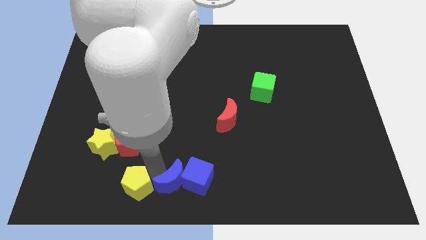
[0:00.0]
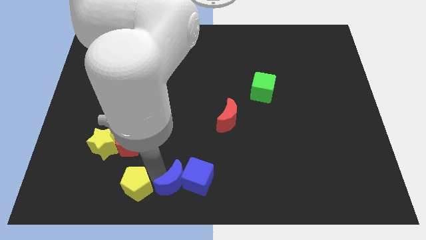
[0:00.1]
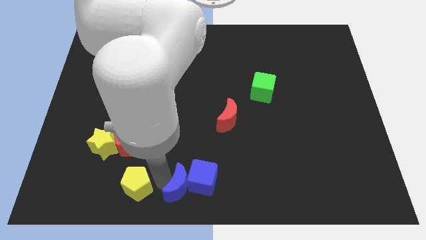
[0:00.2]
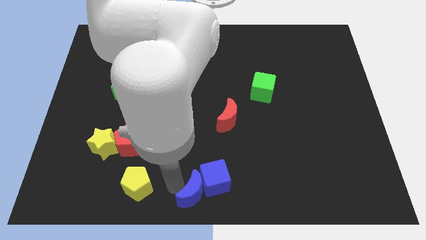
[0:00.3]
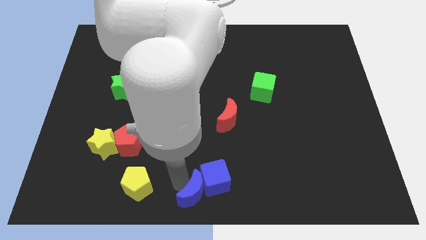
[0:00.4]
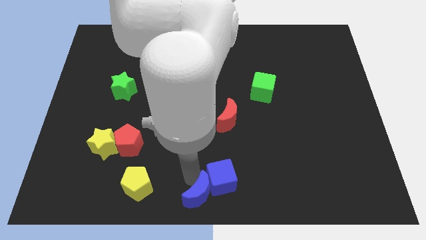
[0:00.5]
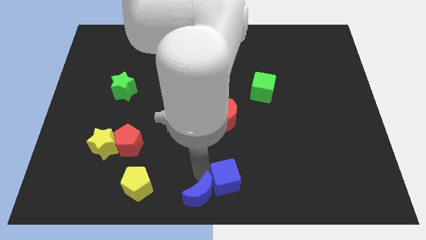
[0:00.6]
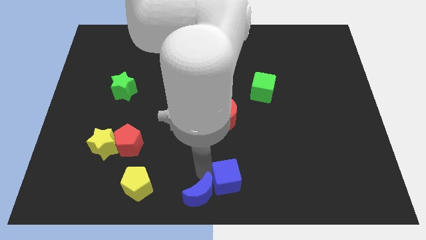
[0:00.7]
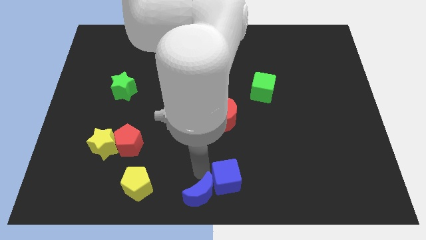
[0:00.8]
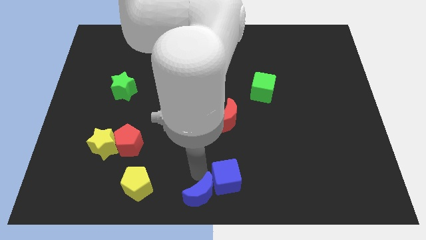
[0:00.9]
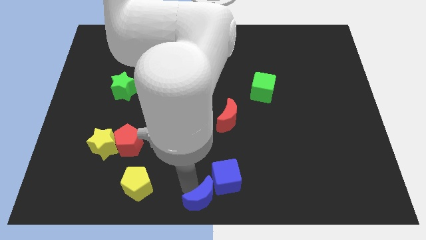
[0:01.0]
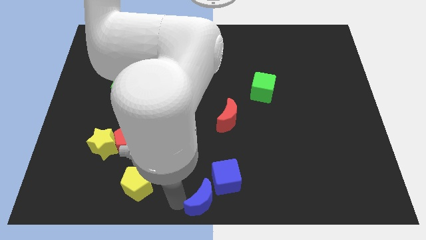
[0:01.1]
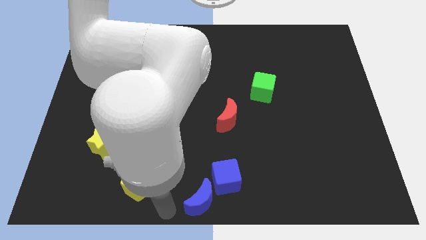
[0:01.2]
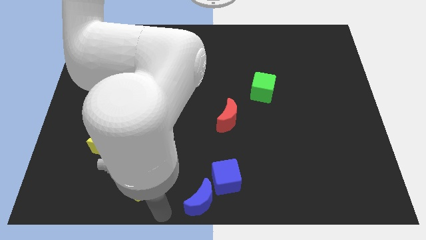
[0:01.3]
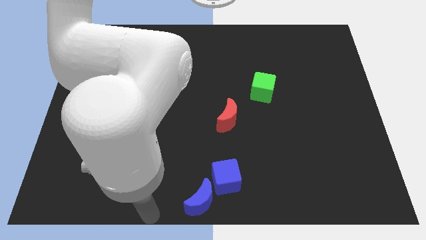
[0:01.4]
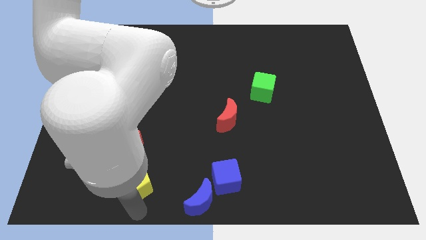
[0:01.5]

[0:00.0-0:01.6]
place the blue blocks at the bottom center of the board

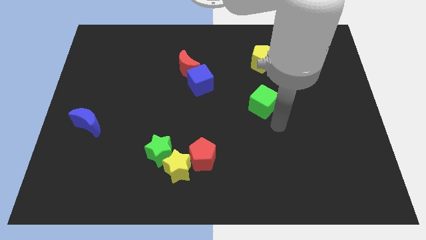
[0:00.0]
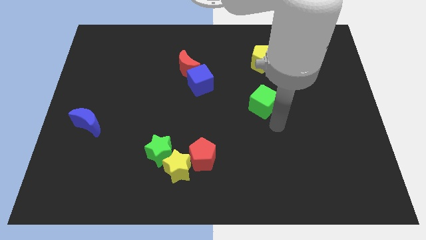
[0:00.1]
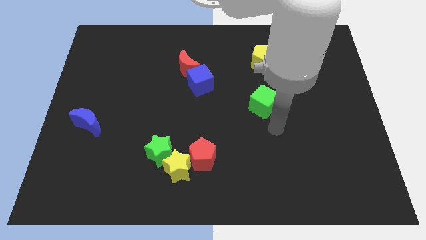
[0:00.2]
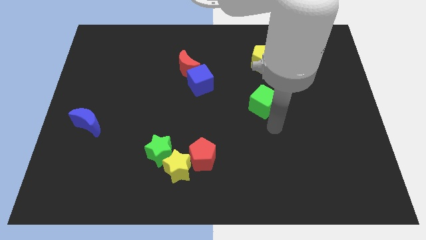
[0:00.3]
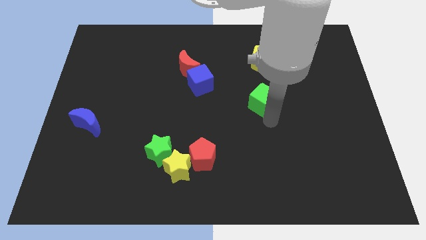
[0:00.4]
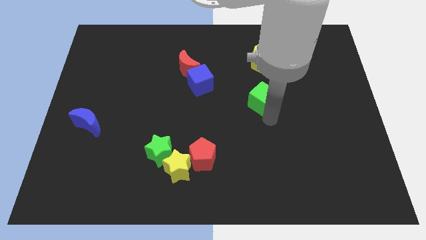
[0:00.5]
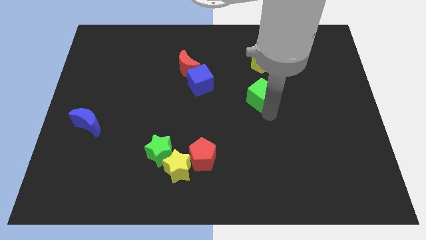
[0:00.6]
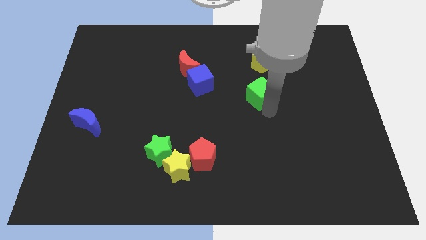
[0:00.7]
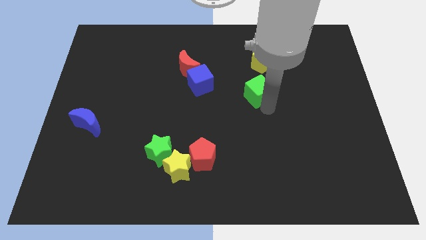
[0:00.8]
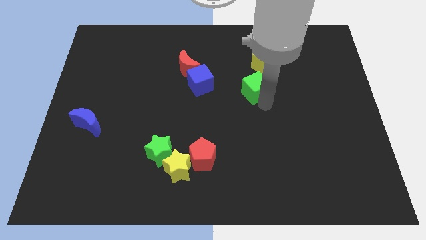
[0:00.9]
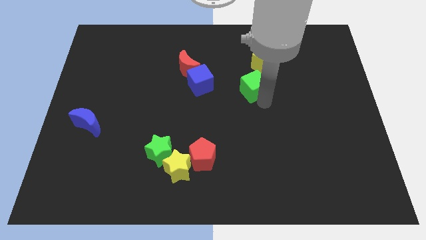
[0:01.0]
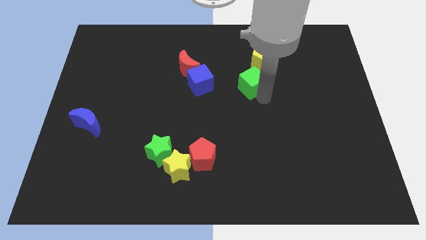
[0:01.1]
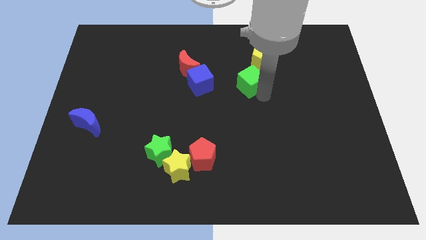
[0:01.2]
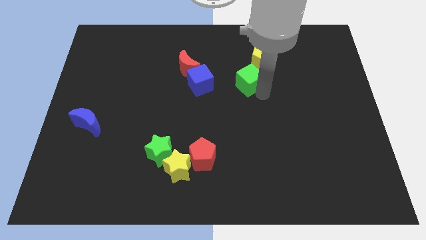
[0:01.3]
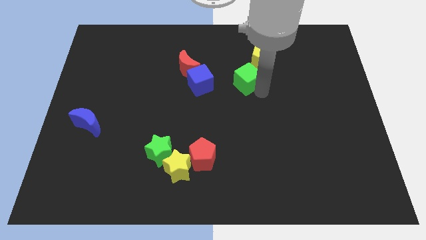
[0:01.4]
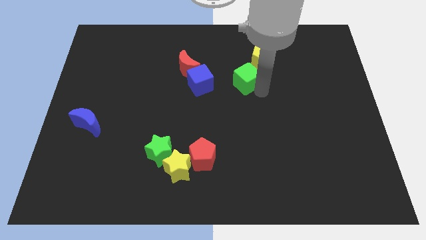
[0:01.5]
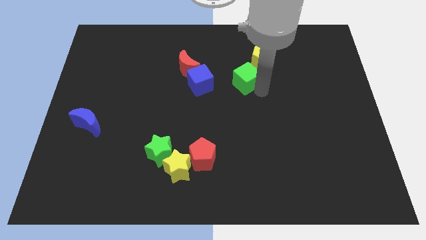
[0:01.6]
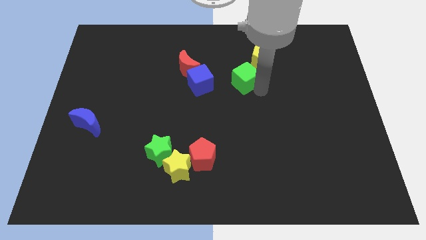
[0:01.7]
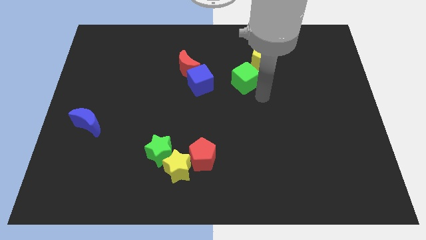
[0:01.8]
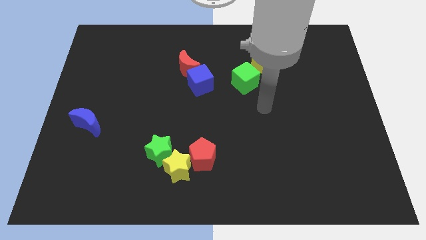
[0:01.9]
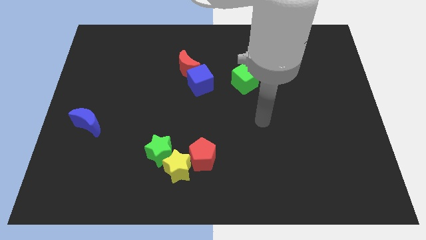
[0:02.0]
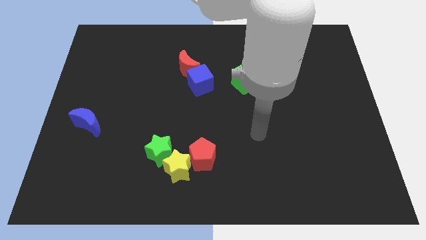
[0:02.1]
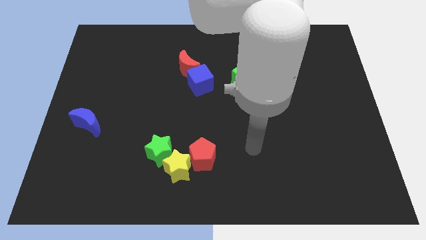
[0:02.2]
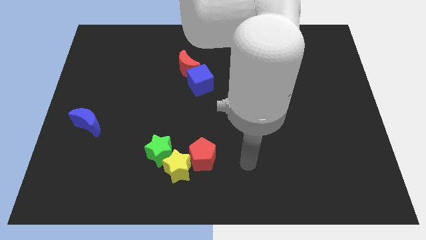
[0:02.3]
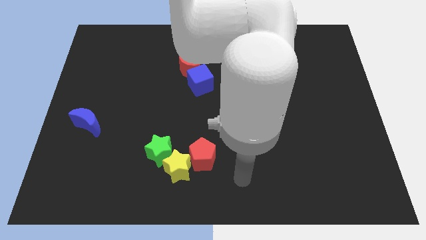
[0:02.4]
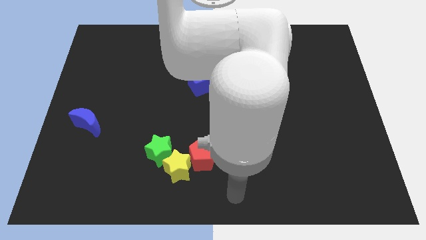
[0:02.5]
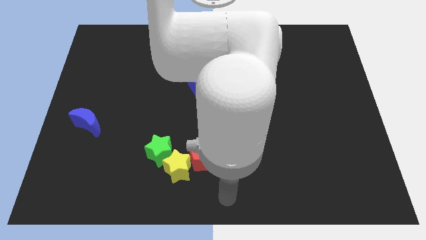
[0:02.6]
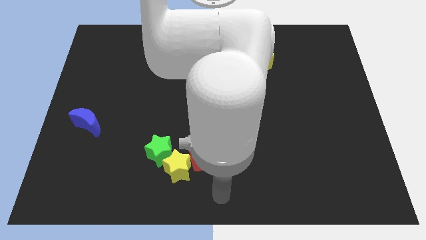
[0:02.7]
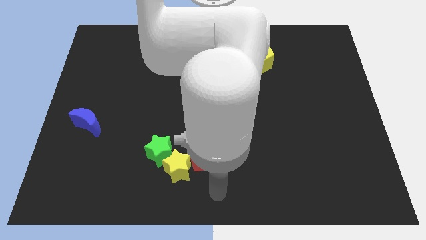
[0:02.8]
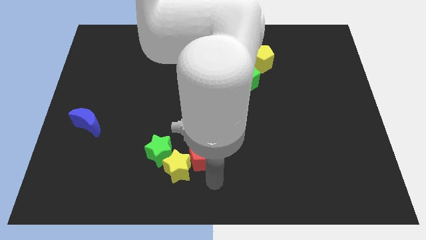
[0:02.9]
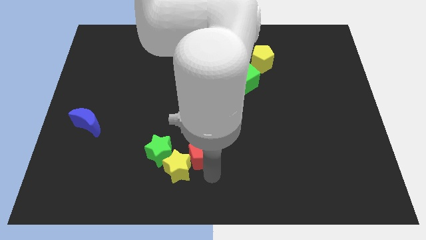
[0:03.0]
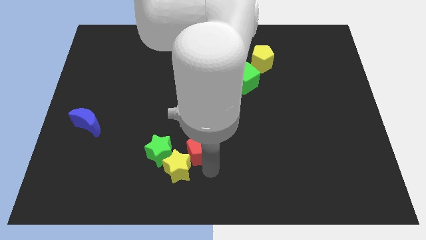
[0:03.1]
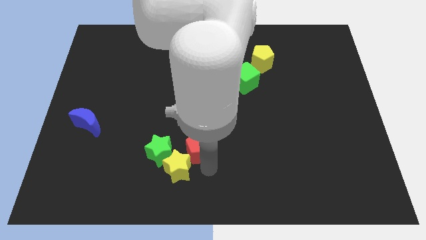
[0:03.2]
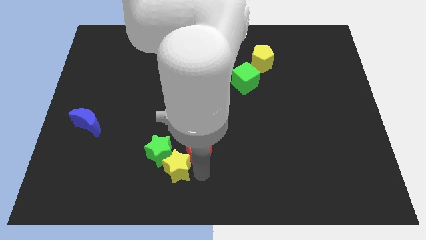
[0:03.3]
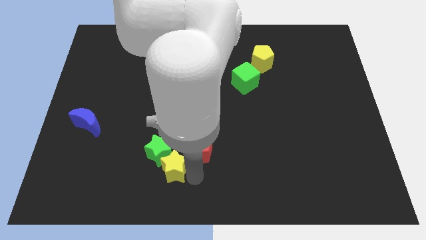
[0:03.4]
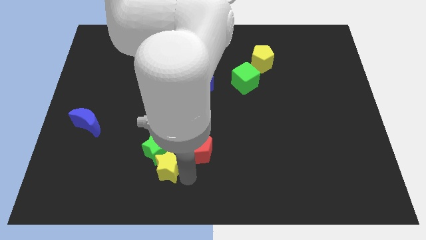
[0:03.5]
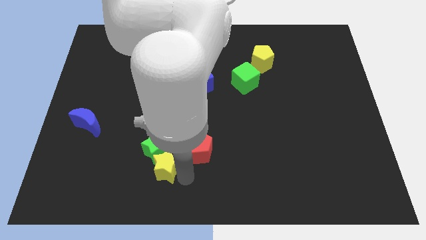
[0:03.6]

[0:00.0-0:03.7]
place the green cube diagonal to the yellow pentagon

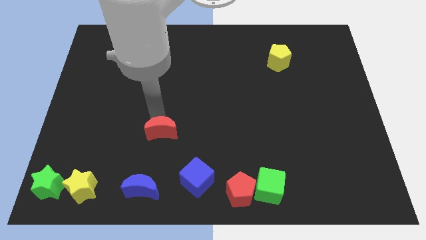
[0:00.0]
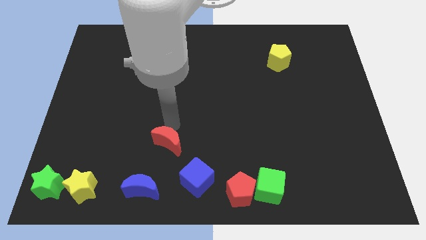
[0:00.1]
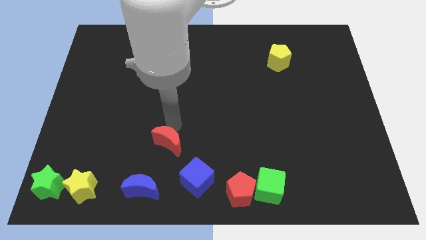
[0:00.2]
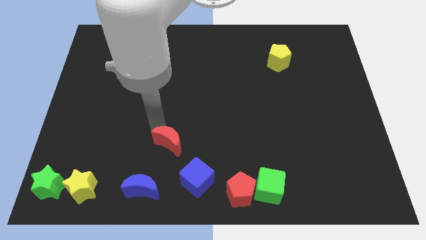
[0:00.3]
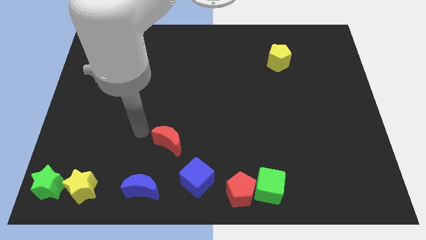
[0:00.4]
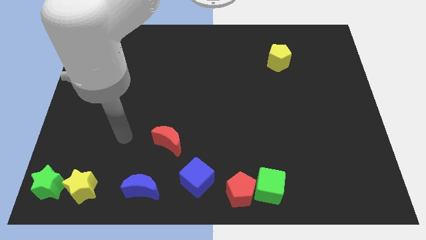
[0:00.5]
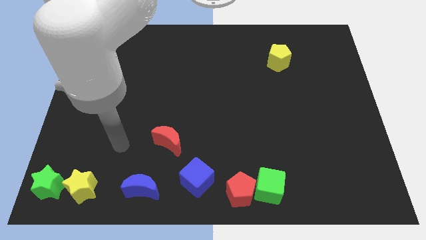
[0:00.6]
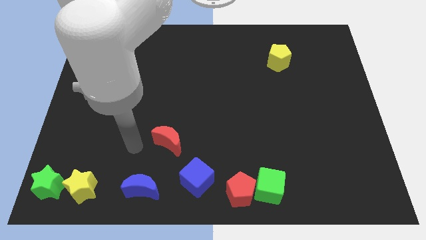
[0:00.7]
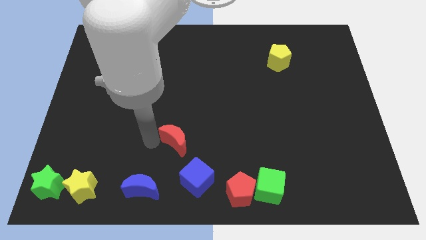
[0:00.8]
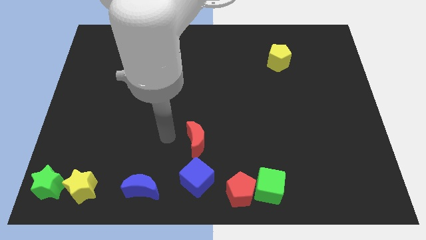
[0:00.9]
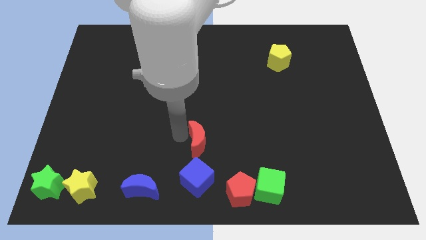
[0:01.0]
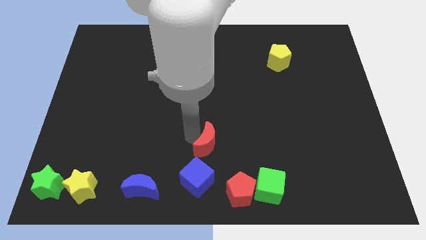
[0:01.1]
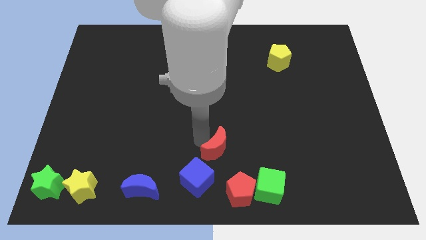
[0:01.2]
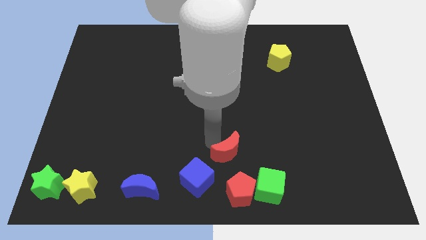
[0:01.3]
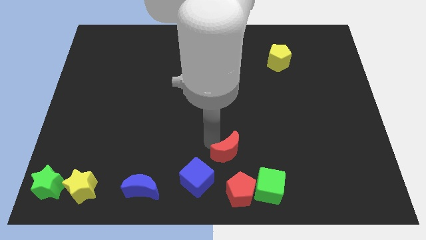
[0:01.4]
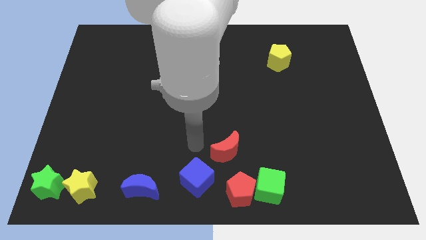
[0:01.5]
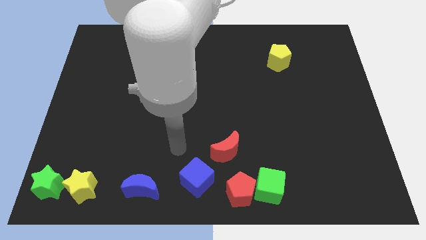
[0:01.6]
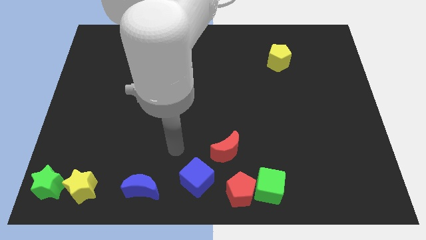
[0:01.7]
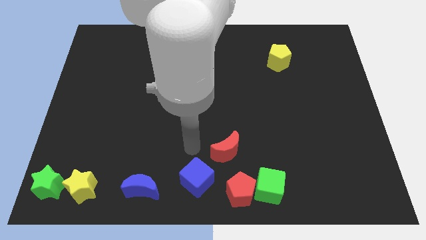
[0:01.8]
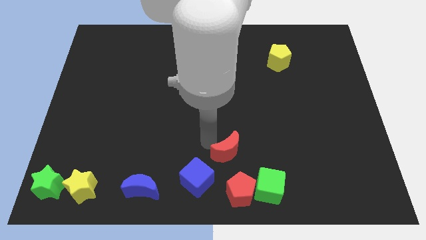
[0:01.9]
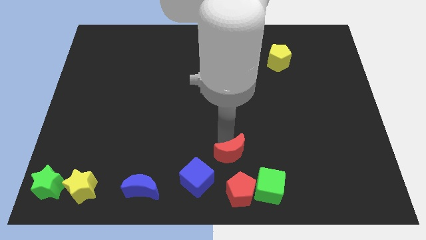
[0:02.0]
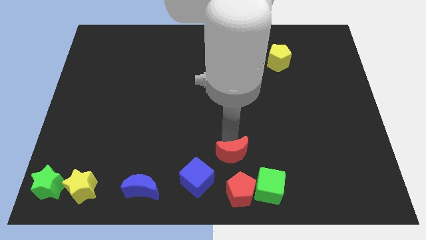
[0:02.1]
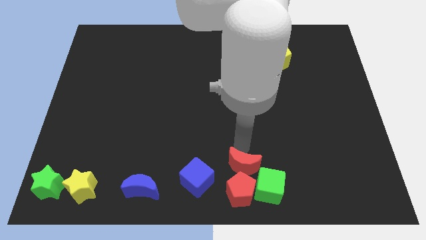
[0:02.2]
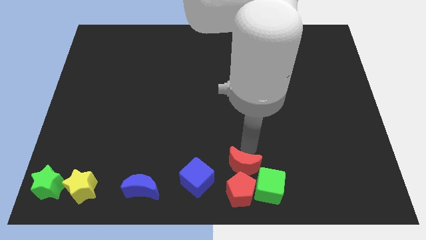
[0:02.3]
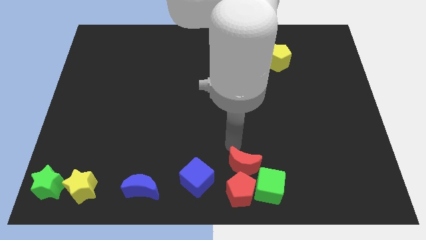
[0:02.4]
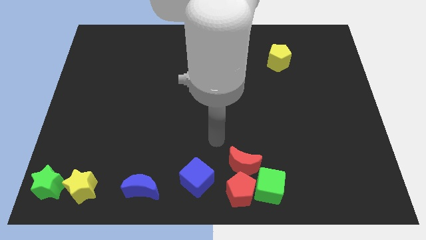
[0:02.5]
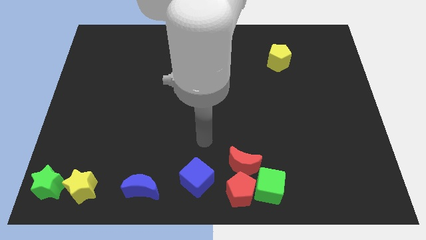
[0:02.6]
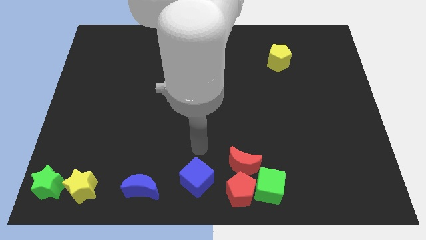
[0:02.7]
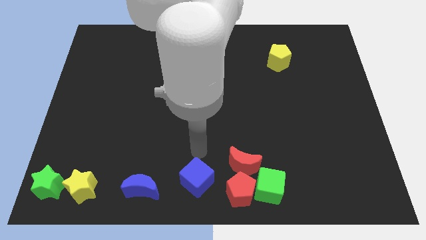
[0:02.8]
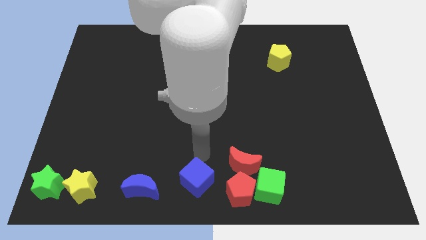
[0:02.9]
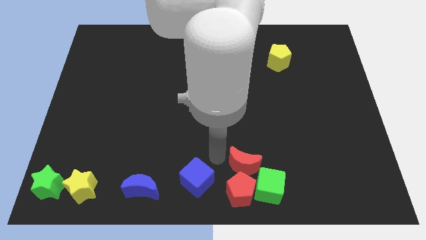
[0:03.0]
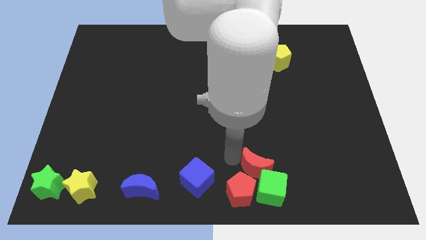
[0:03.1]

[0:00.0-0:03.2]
put the red moon vertically above the red pentagon

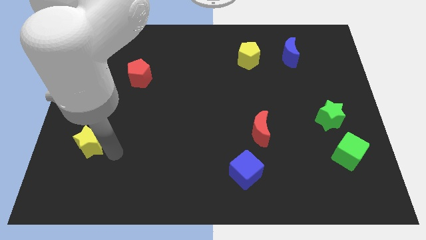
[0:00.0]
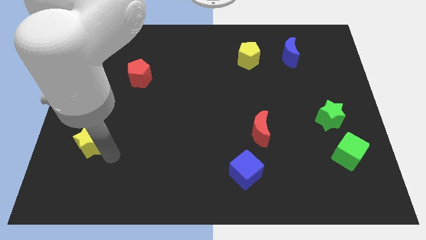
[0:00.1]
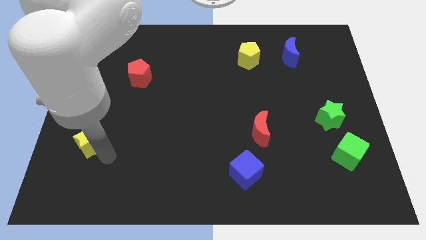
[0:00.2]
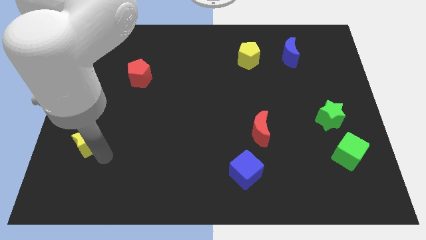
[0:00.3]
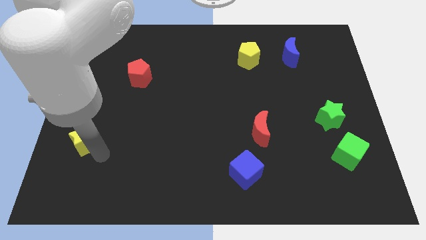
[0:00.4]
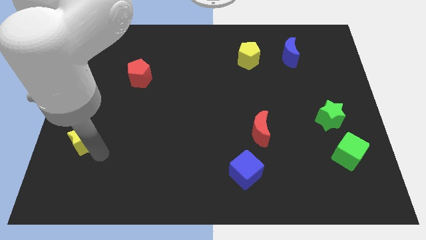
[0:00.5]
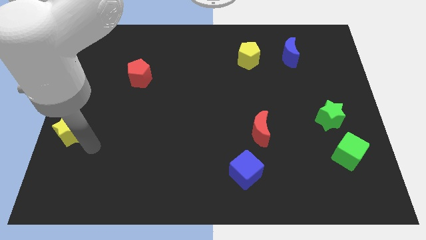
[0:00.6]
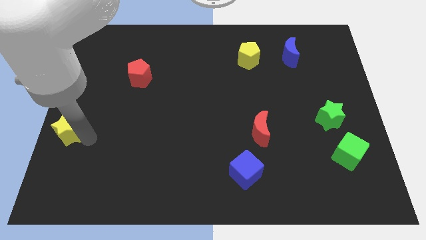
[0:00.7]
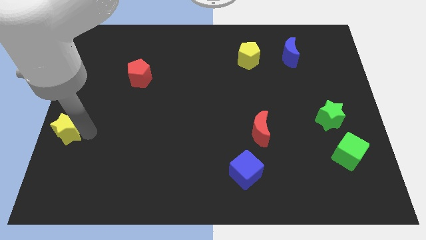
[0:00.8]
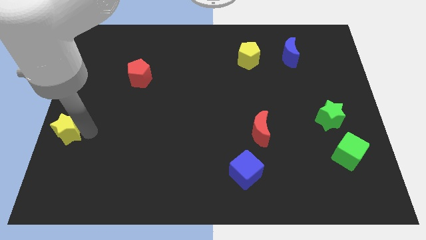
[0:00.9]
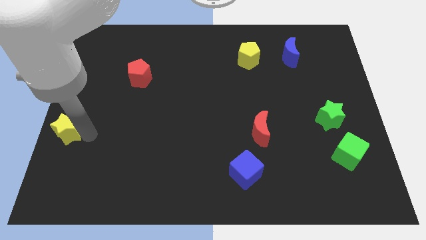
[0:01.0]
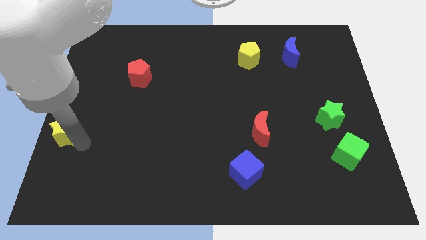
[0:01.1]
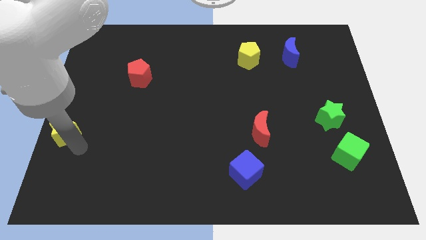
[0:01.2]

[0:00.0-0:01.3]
push the yellow star to the center left of the board
